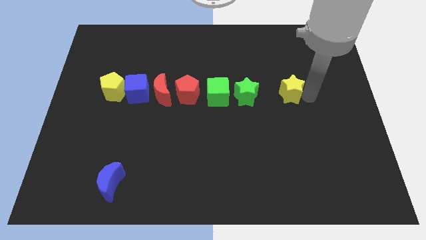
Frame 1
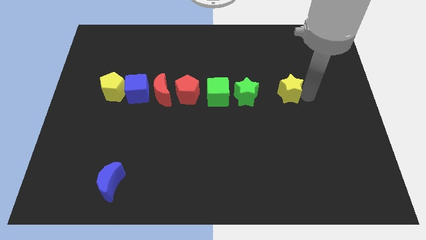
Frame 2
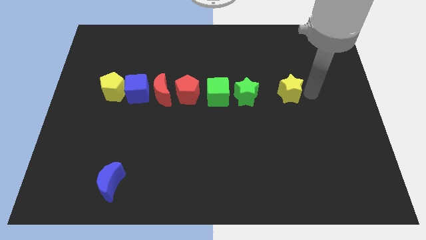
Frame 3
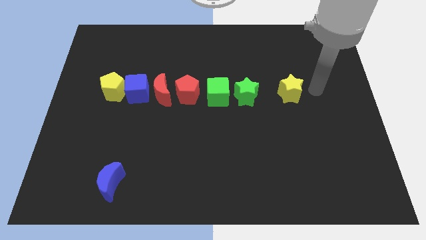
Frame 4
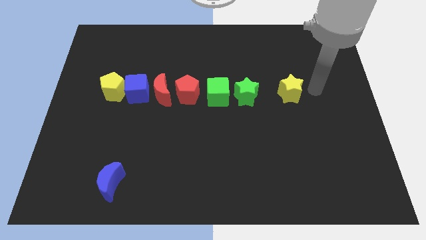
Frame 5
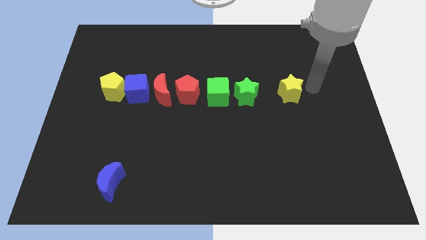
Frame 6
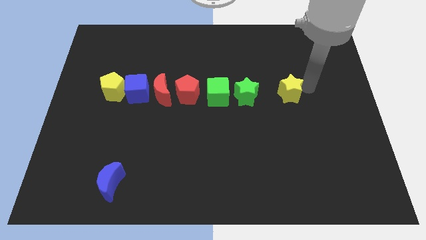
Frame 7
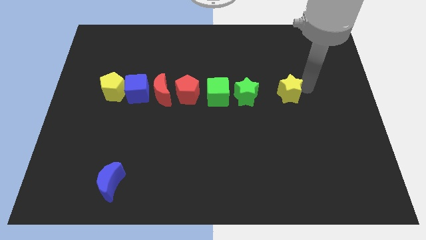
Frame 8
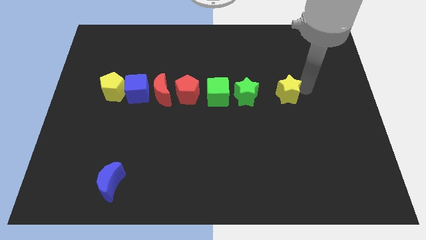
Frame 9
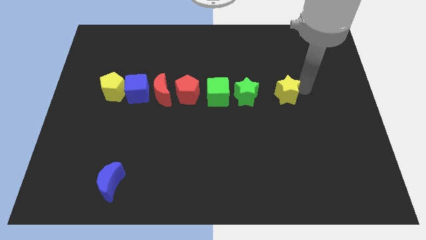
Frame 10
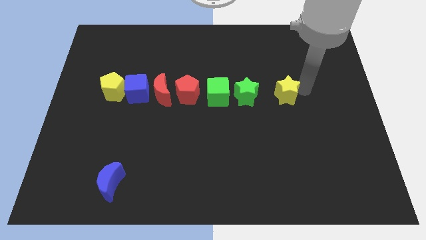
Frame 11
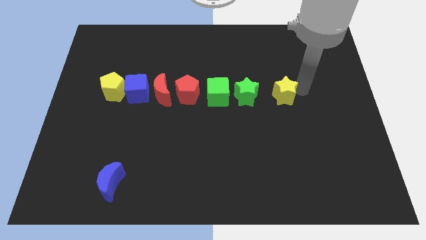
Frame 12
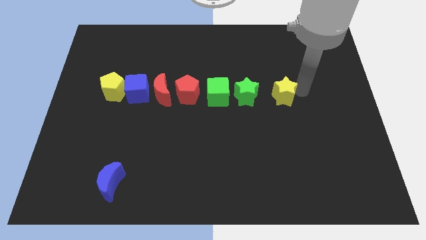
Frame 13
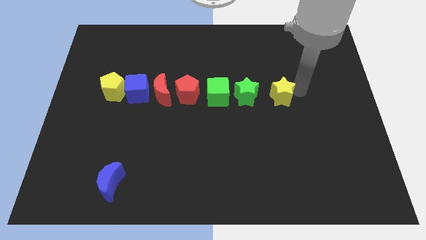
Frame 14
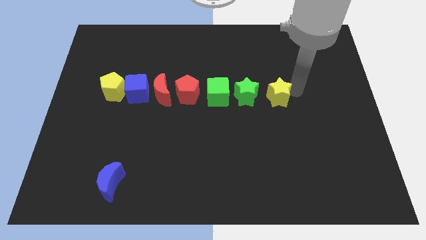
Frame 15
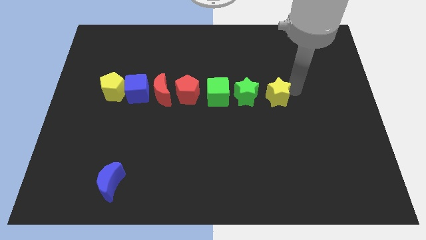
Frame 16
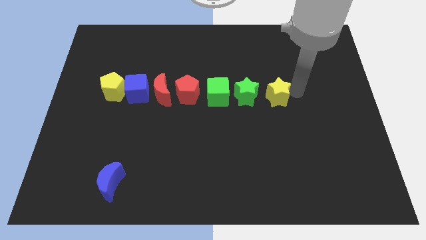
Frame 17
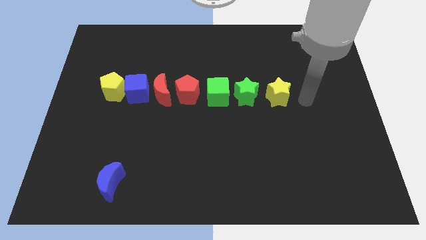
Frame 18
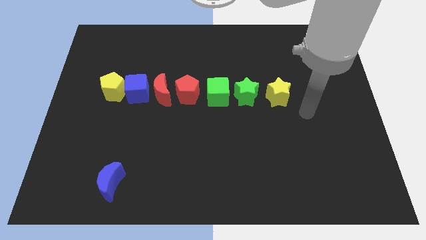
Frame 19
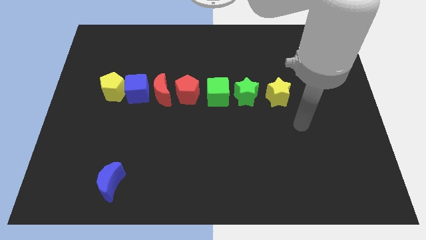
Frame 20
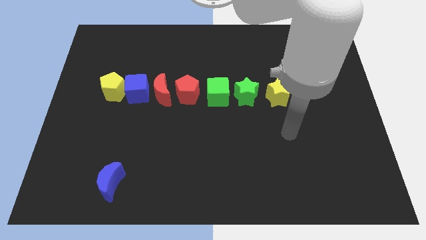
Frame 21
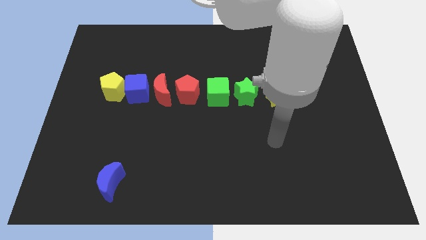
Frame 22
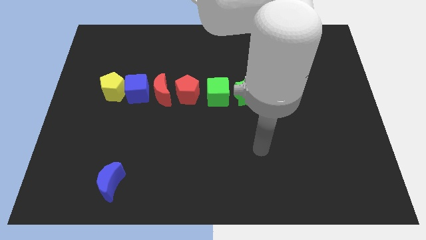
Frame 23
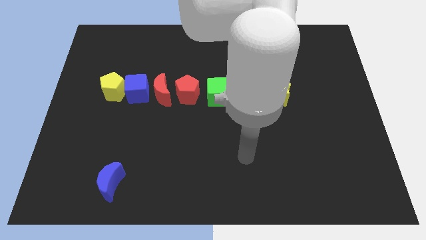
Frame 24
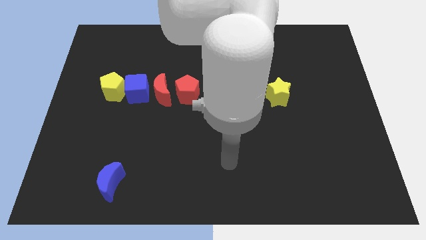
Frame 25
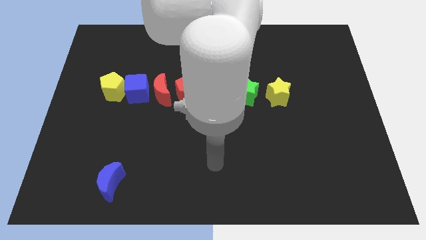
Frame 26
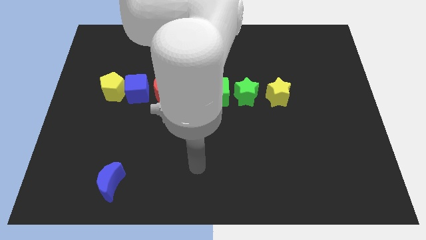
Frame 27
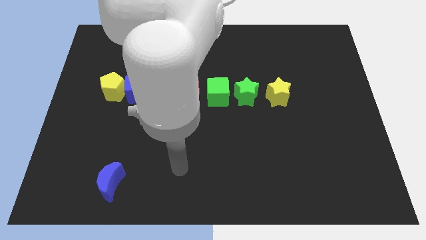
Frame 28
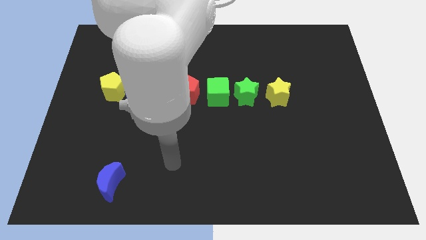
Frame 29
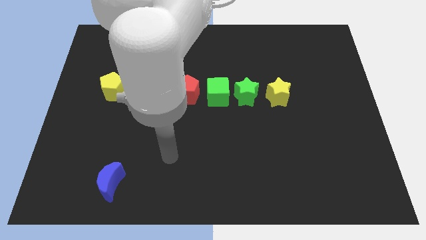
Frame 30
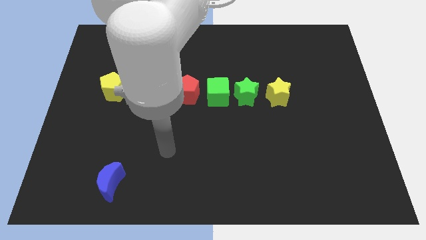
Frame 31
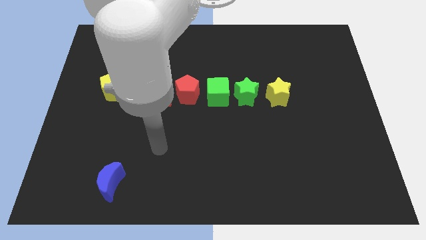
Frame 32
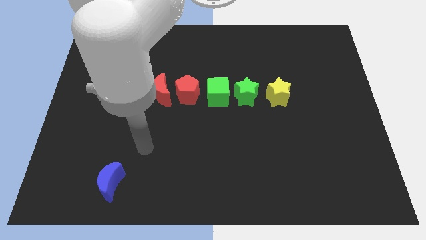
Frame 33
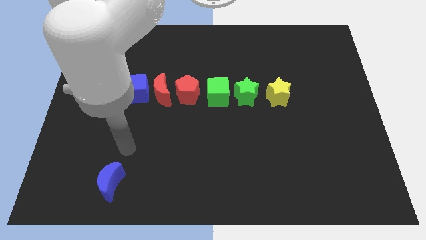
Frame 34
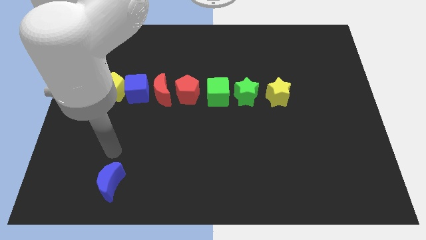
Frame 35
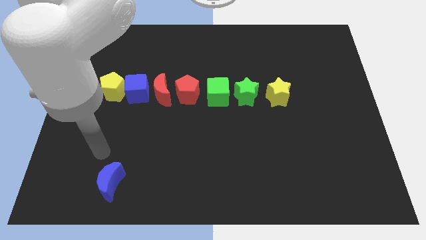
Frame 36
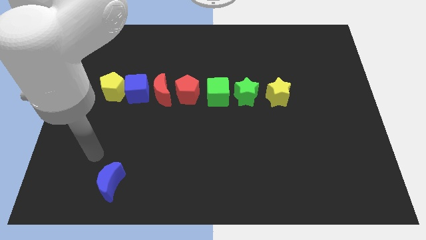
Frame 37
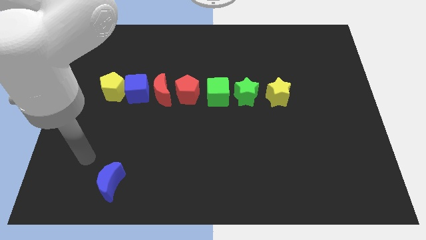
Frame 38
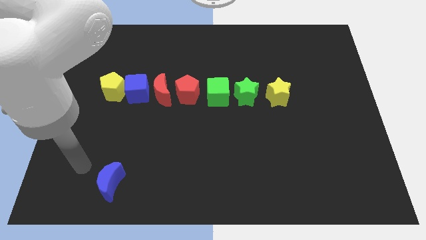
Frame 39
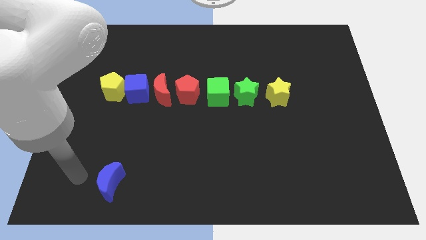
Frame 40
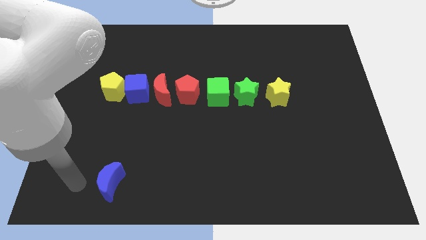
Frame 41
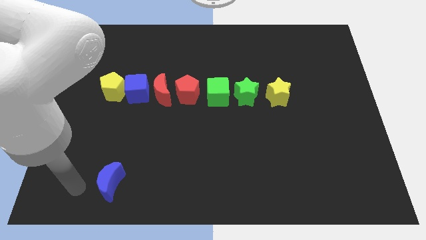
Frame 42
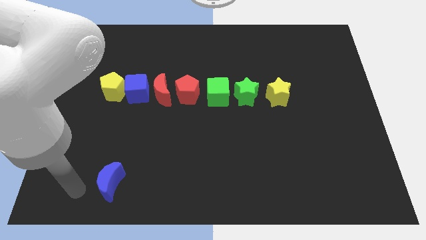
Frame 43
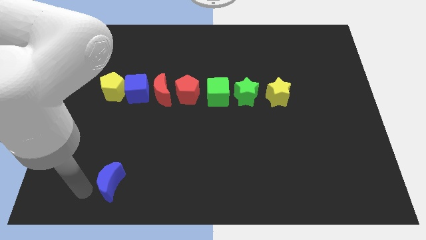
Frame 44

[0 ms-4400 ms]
place your arm to the left of blue crescent

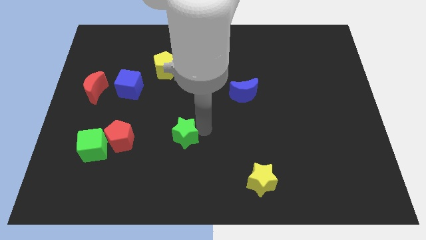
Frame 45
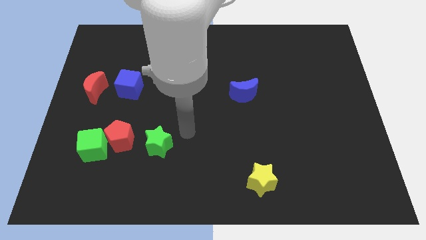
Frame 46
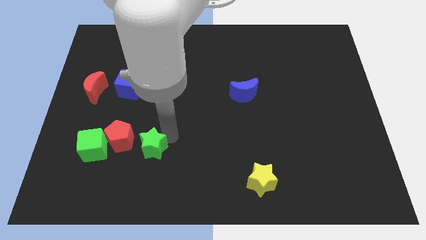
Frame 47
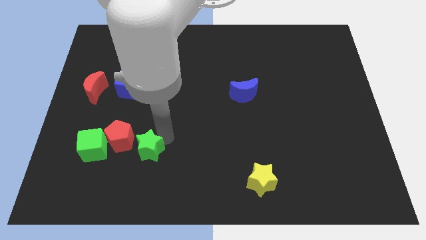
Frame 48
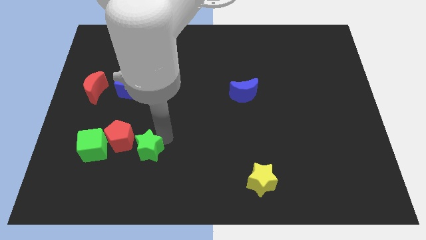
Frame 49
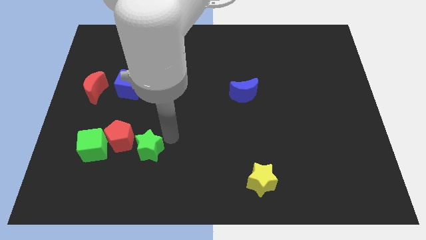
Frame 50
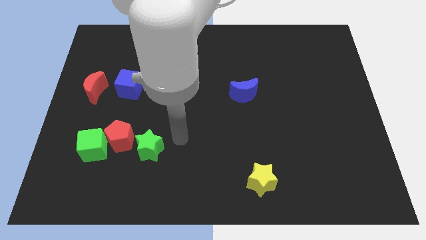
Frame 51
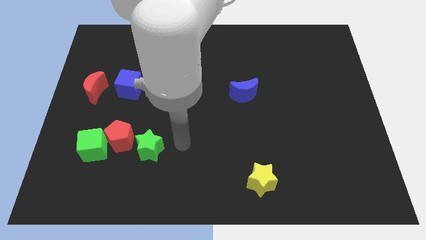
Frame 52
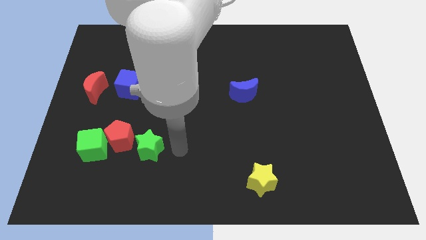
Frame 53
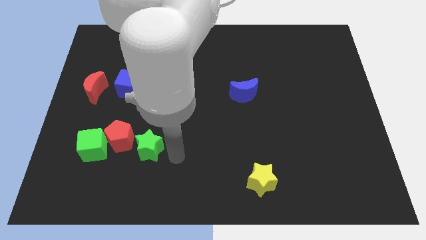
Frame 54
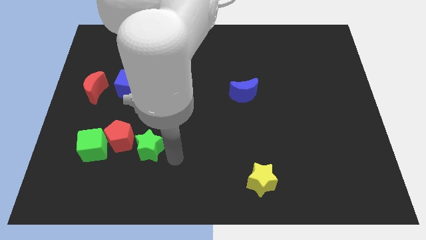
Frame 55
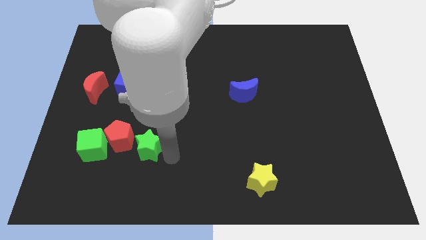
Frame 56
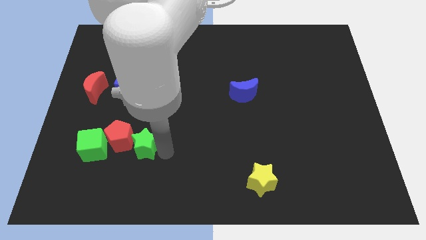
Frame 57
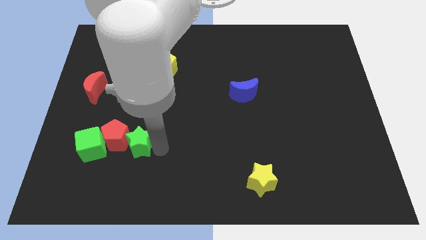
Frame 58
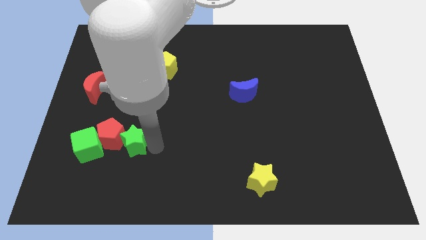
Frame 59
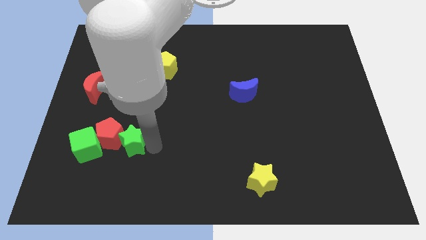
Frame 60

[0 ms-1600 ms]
push the green star into the red pentagon

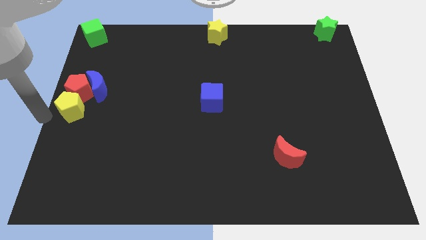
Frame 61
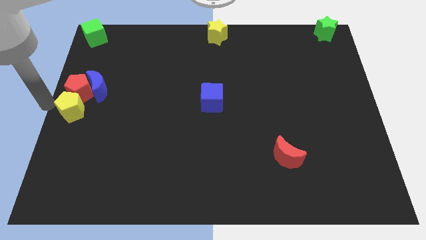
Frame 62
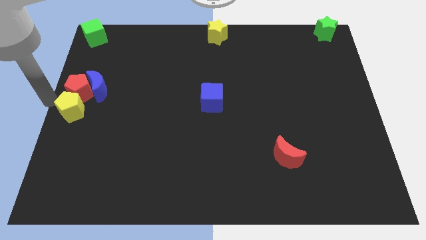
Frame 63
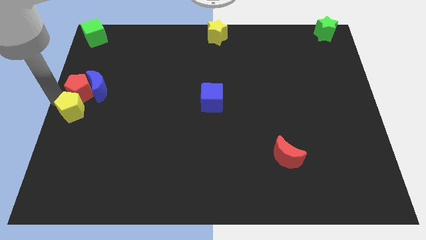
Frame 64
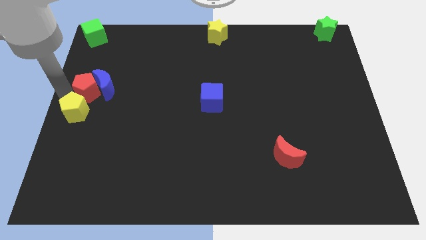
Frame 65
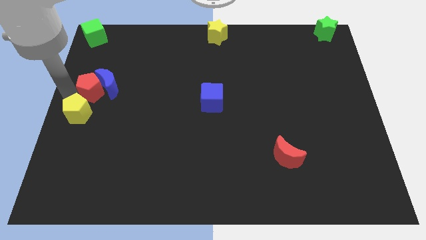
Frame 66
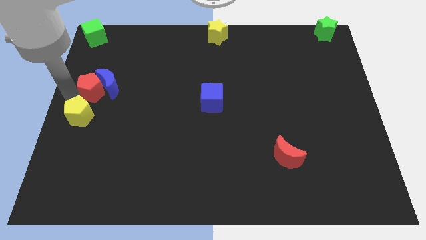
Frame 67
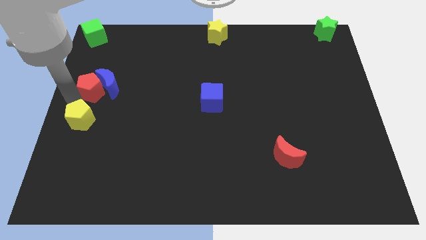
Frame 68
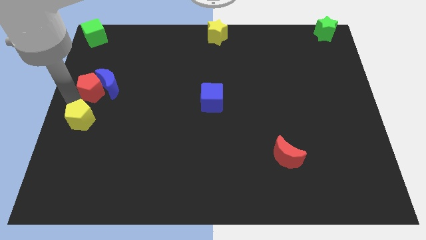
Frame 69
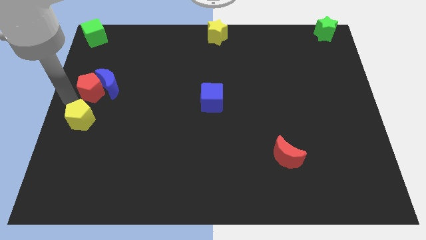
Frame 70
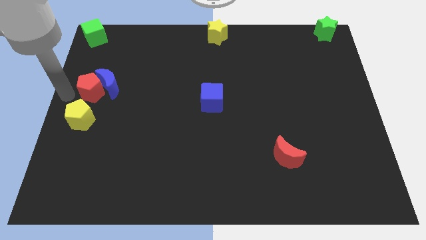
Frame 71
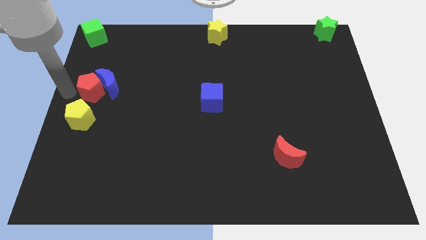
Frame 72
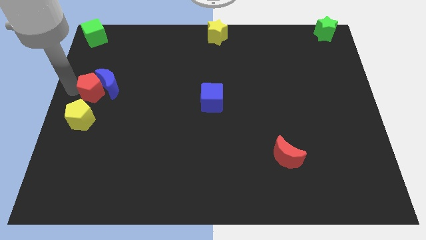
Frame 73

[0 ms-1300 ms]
separate the yellow pentagon from the red pentagon

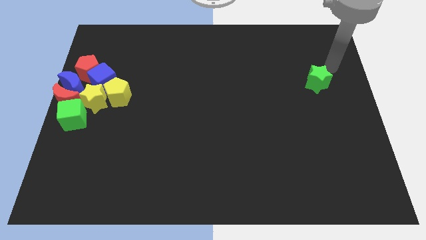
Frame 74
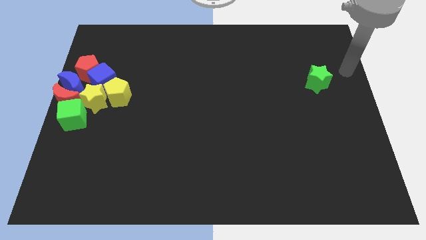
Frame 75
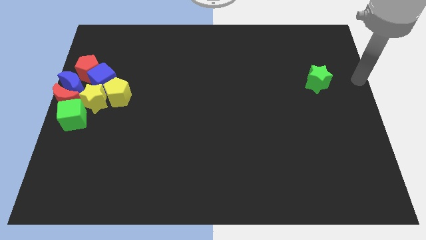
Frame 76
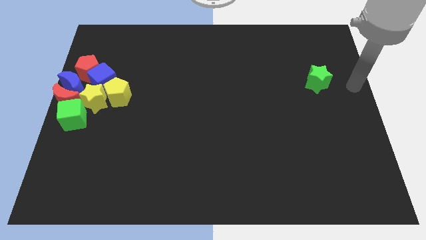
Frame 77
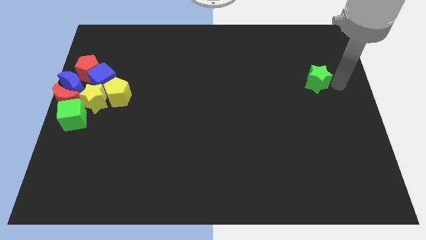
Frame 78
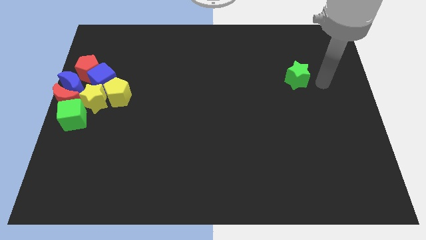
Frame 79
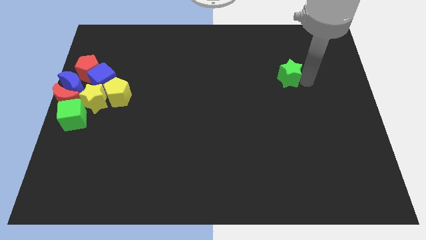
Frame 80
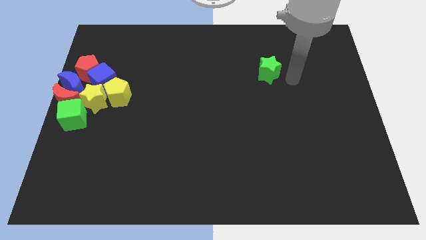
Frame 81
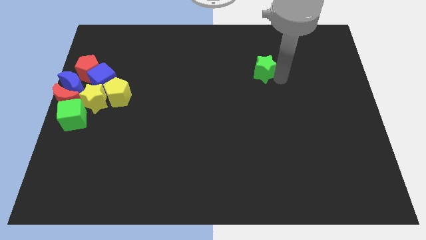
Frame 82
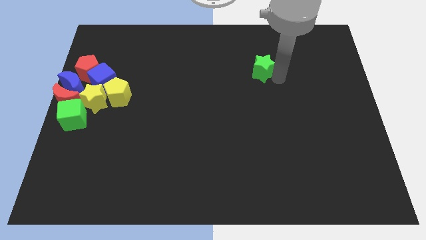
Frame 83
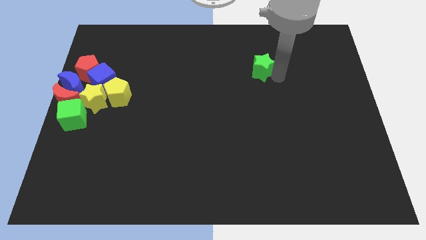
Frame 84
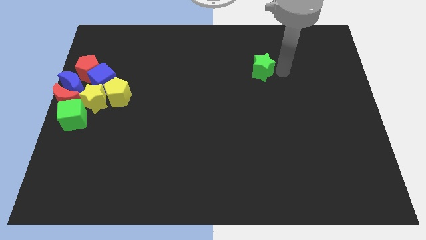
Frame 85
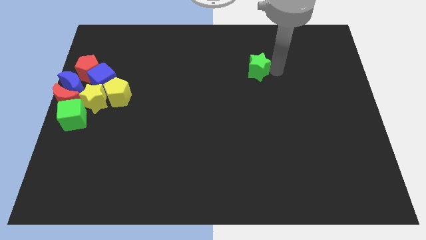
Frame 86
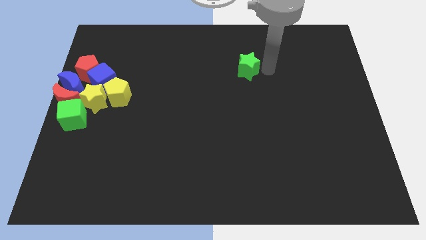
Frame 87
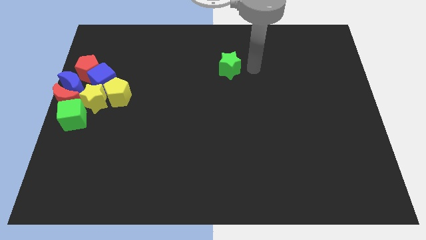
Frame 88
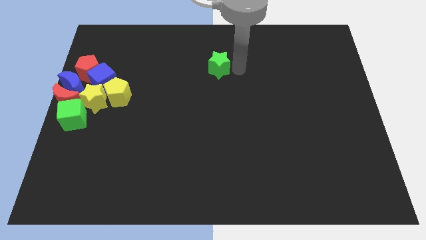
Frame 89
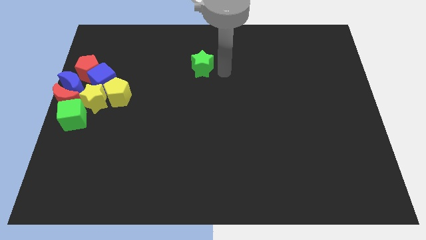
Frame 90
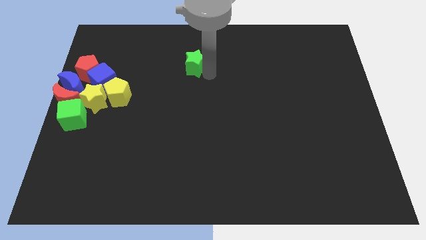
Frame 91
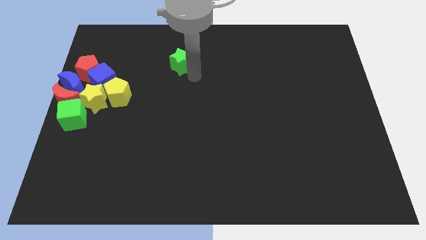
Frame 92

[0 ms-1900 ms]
move the green star slightly to the left

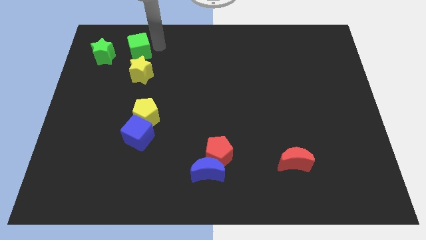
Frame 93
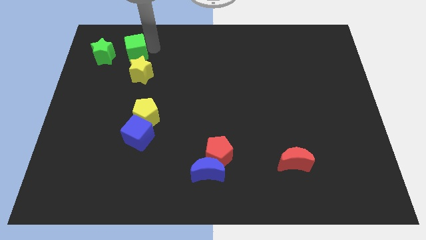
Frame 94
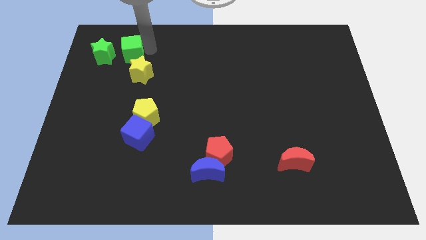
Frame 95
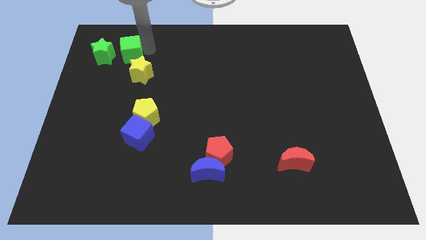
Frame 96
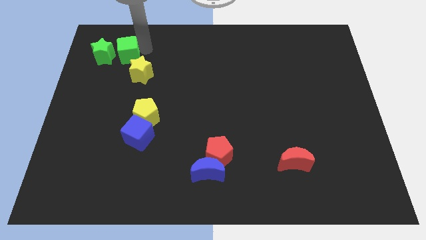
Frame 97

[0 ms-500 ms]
move the green cube right to the green star
